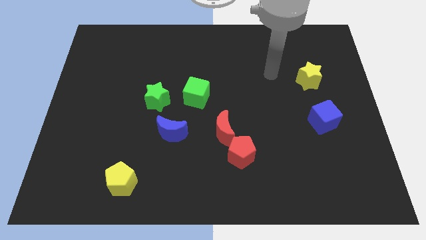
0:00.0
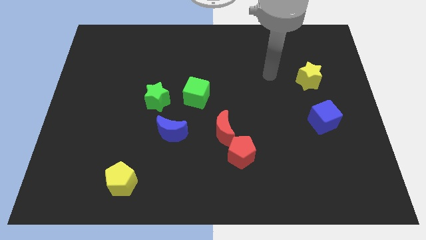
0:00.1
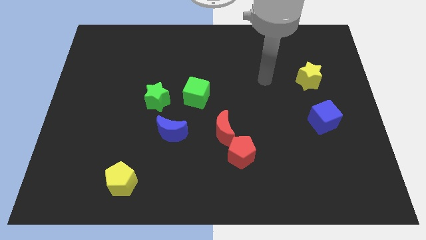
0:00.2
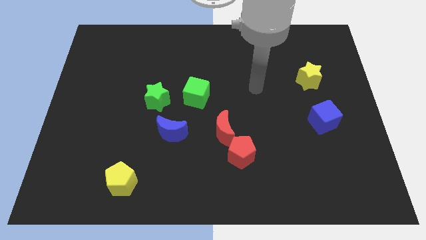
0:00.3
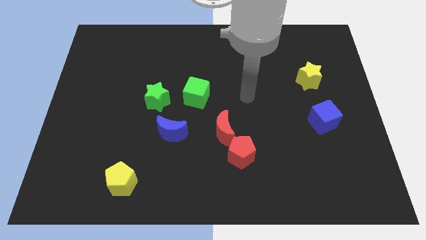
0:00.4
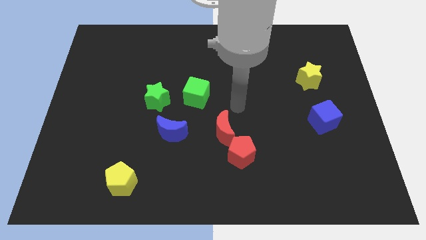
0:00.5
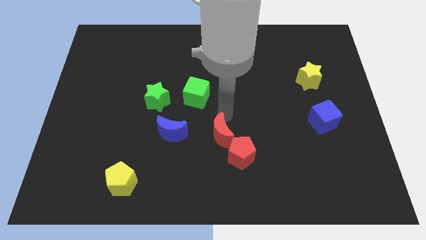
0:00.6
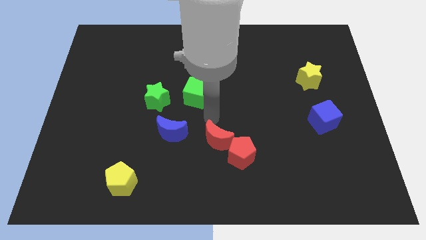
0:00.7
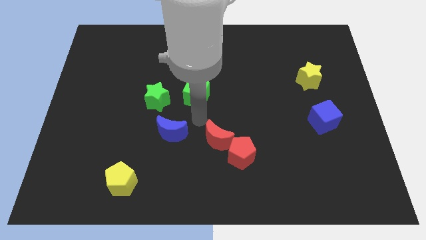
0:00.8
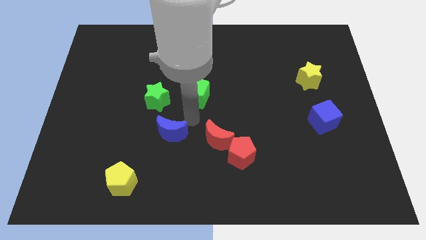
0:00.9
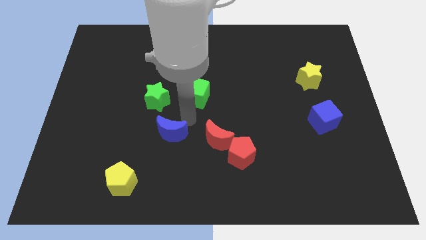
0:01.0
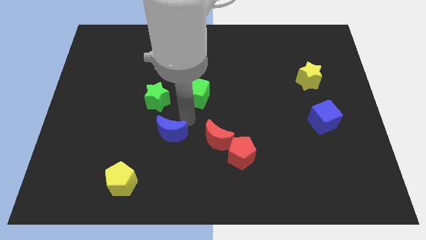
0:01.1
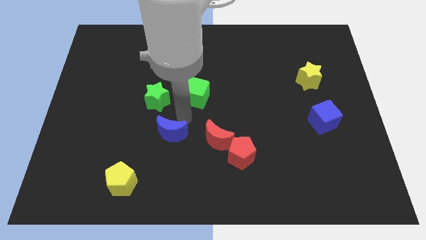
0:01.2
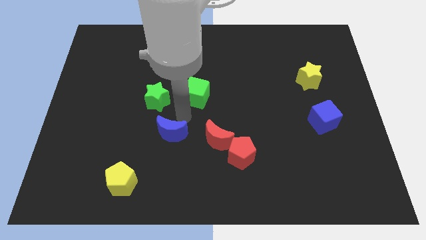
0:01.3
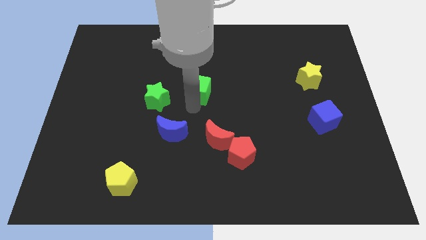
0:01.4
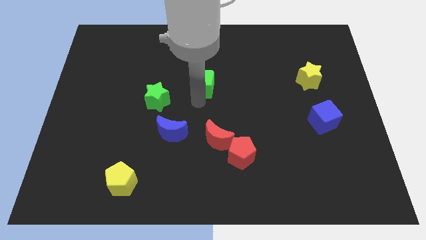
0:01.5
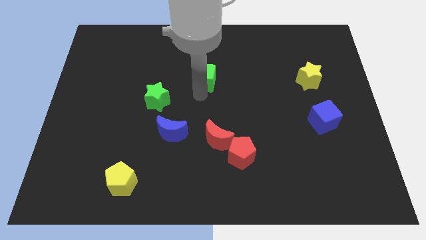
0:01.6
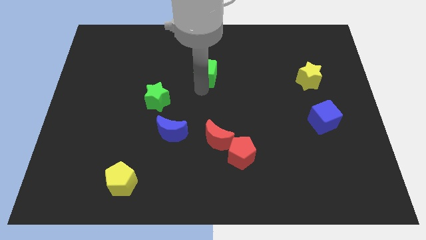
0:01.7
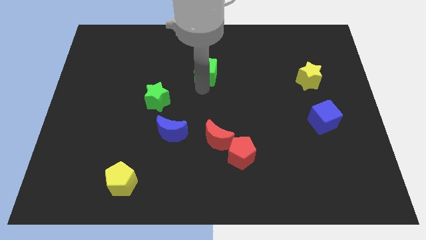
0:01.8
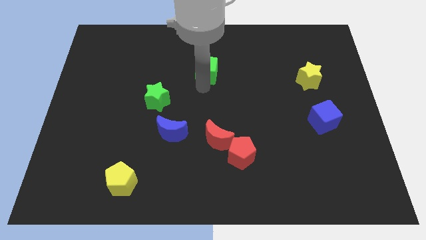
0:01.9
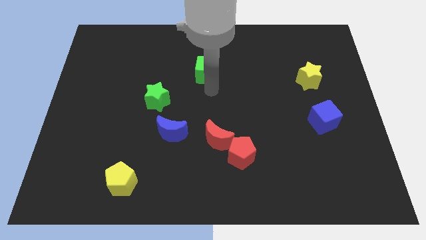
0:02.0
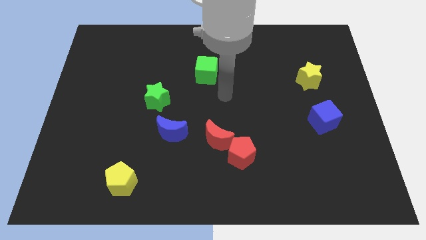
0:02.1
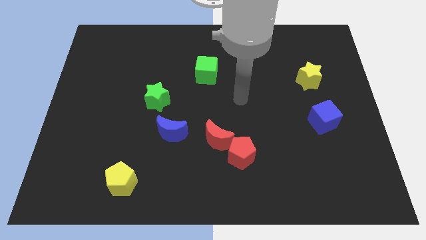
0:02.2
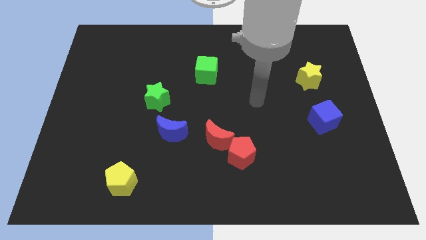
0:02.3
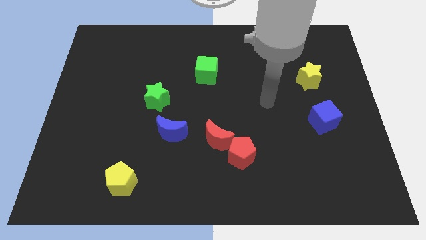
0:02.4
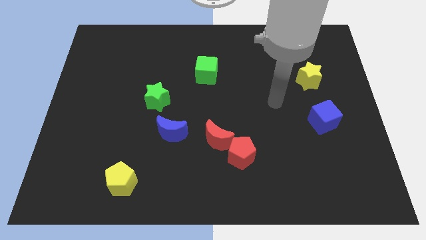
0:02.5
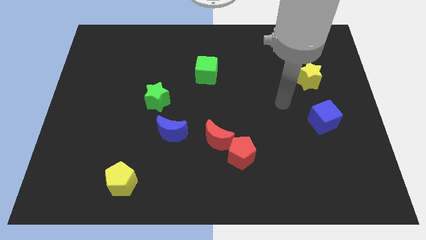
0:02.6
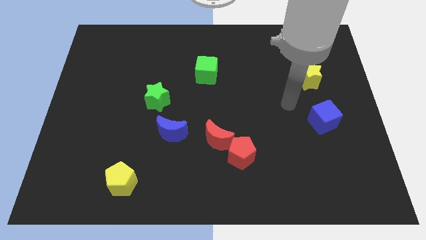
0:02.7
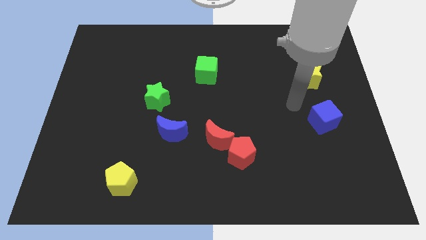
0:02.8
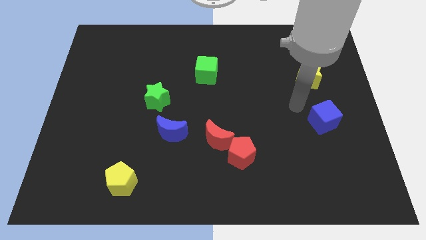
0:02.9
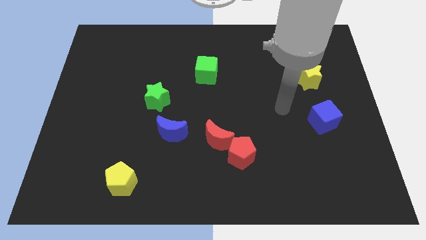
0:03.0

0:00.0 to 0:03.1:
push the red blocks and green cube in opposite directions

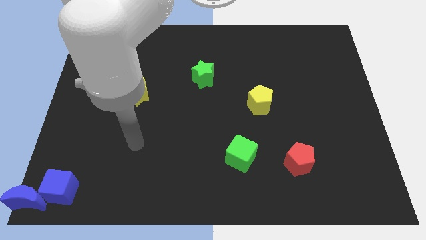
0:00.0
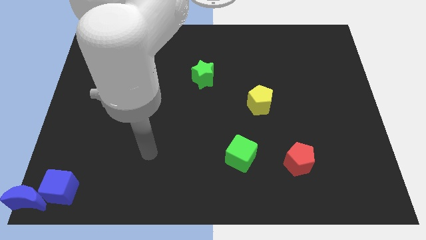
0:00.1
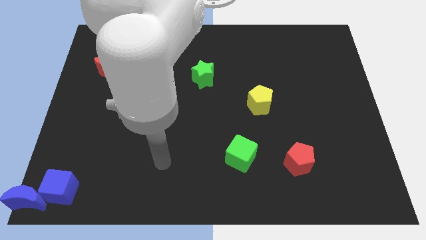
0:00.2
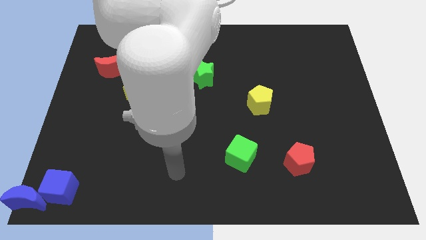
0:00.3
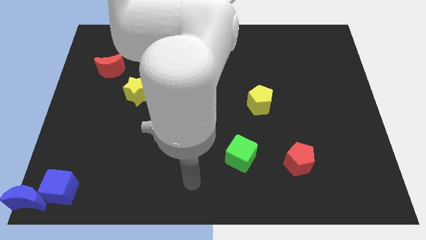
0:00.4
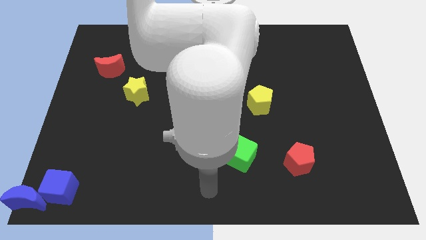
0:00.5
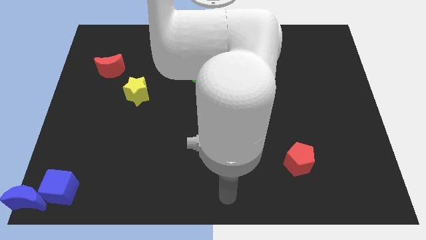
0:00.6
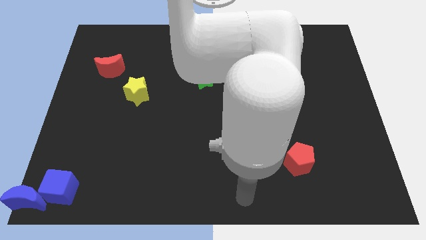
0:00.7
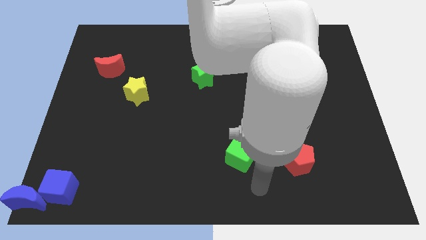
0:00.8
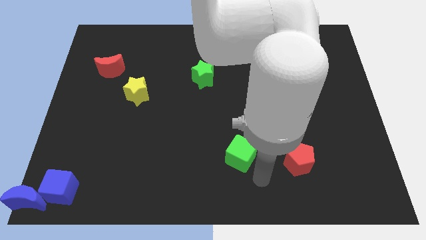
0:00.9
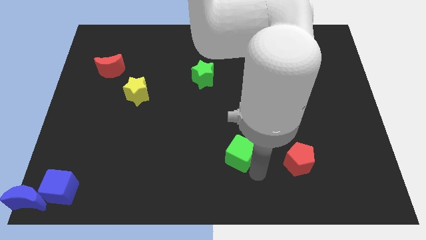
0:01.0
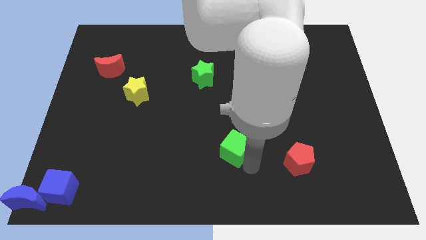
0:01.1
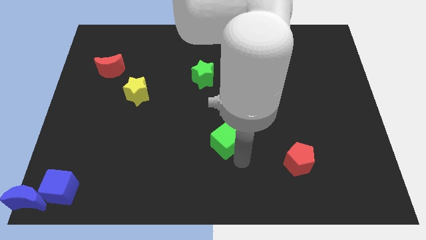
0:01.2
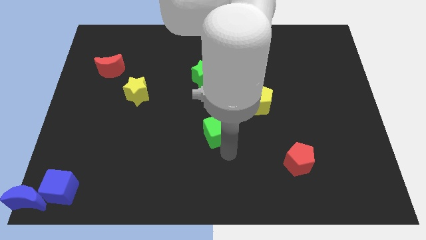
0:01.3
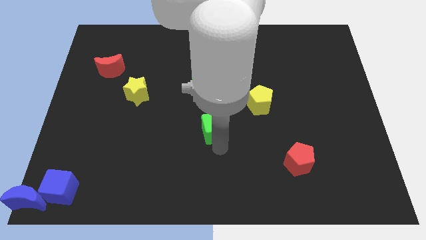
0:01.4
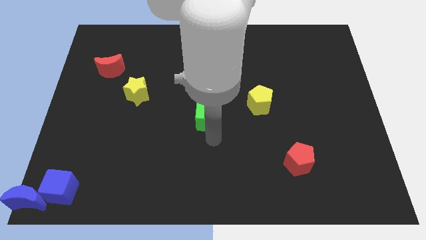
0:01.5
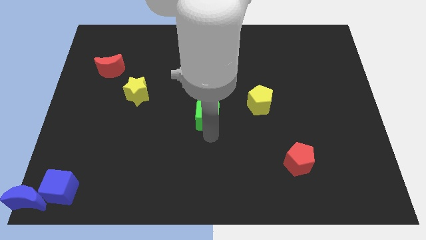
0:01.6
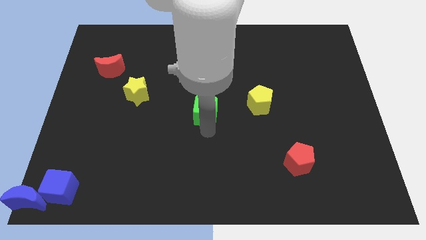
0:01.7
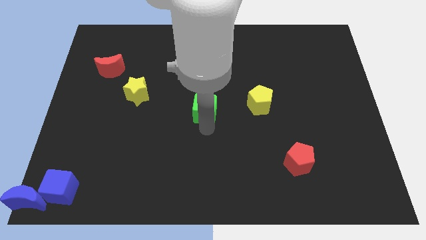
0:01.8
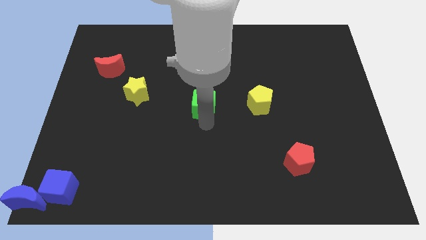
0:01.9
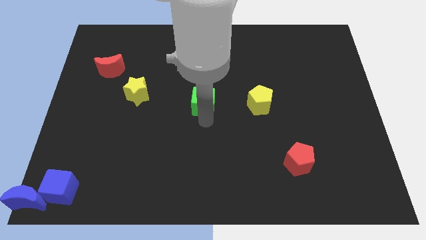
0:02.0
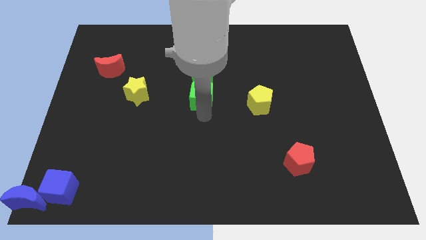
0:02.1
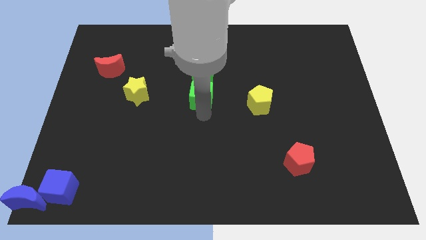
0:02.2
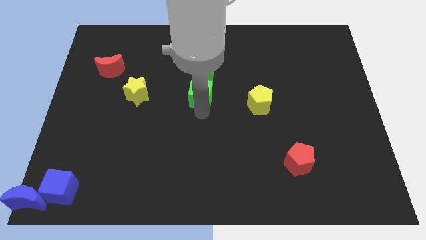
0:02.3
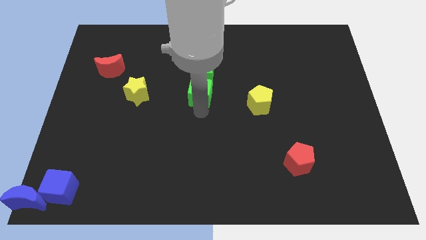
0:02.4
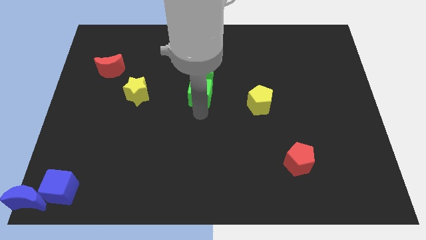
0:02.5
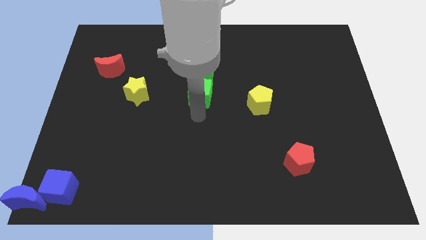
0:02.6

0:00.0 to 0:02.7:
move the green cube to the bottom of the green star

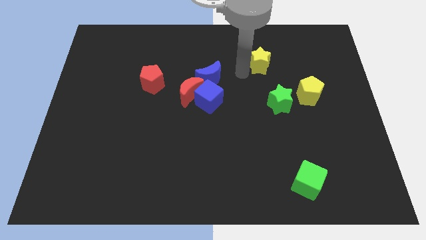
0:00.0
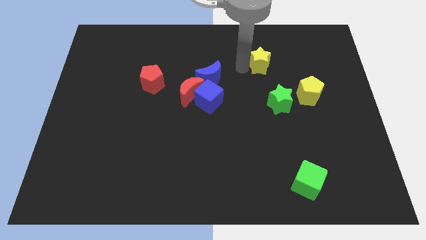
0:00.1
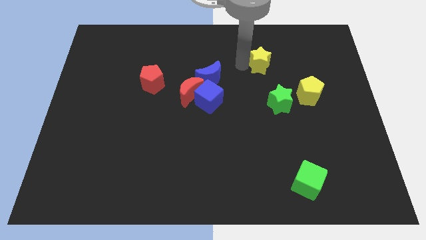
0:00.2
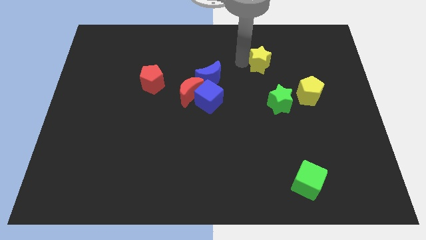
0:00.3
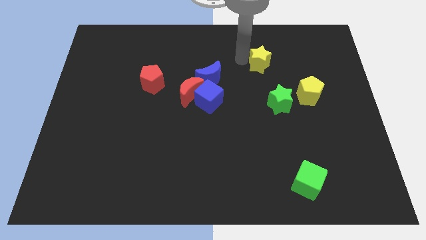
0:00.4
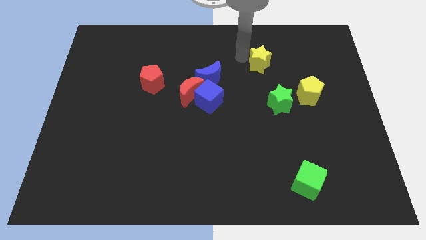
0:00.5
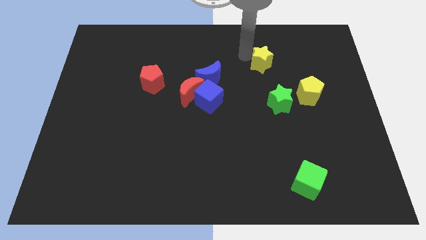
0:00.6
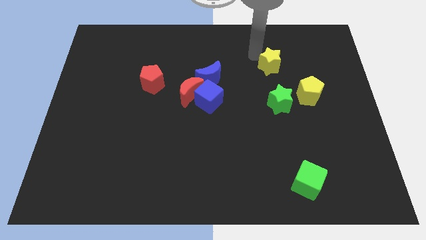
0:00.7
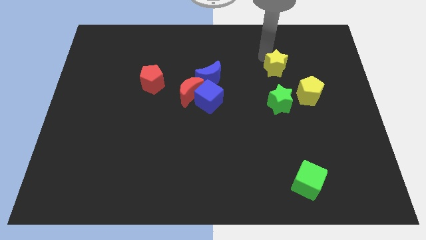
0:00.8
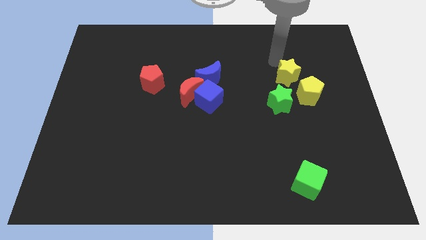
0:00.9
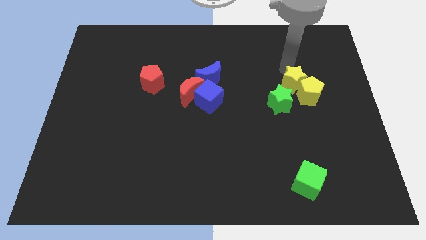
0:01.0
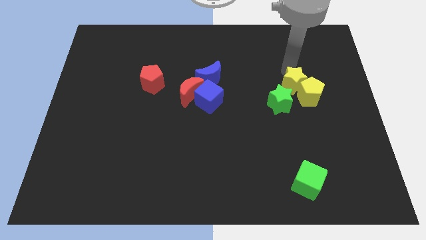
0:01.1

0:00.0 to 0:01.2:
move the yellow star into the yellow pentagon

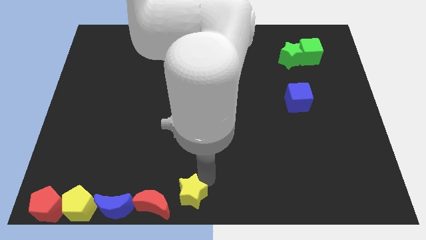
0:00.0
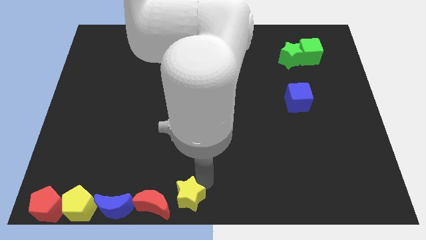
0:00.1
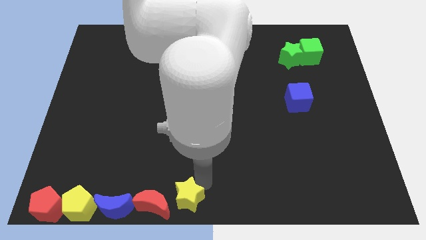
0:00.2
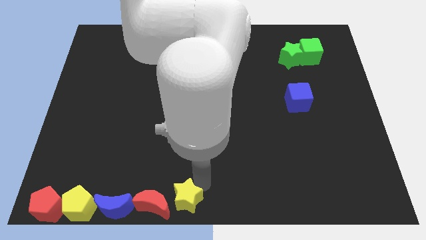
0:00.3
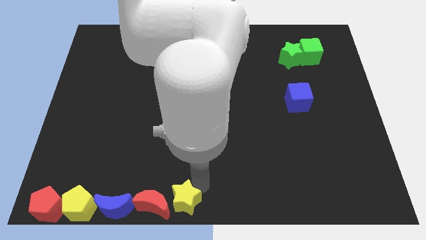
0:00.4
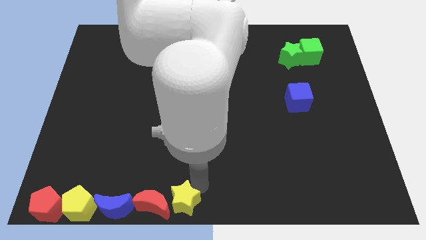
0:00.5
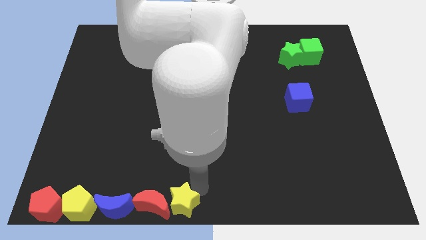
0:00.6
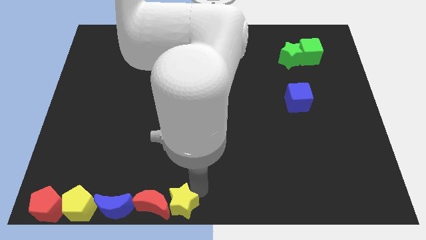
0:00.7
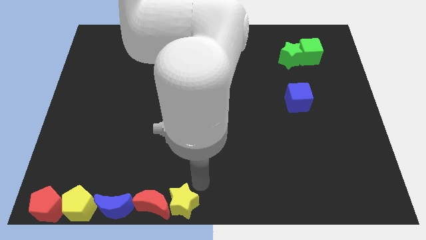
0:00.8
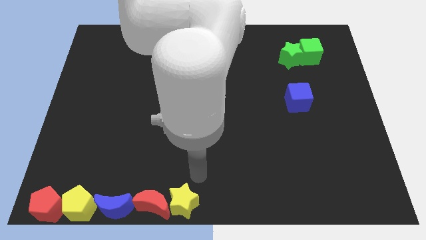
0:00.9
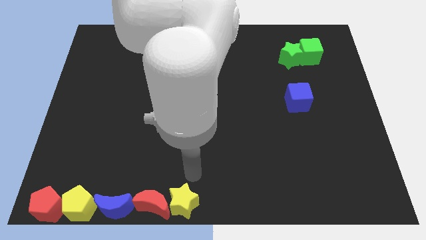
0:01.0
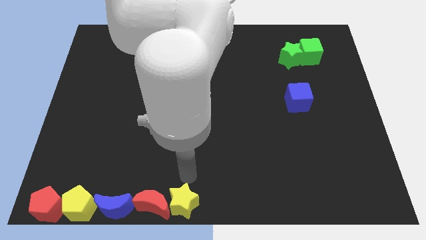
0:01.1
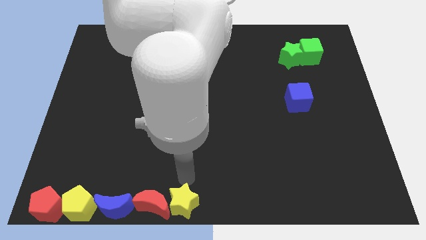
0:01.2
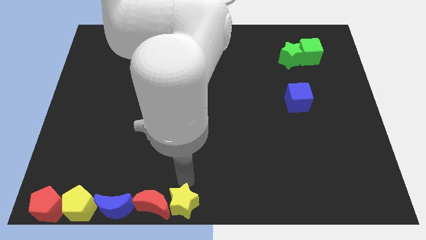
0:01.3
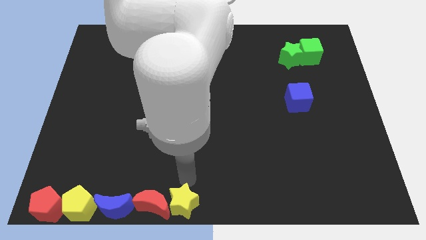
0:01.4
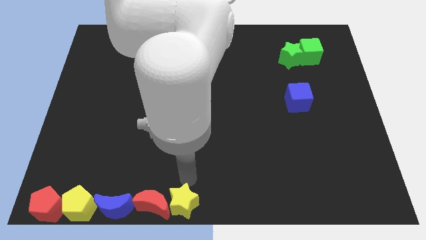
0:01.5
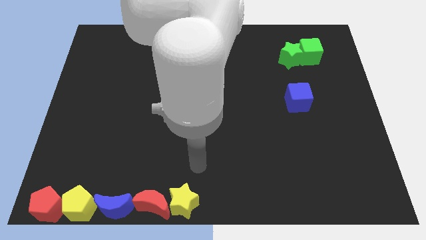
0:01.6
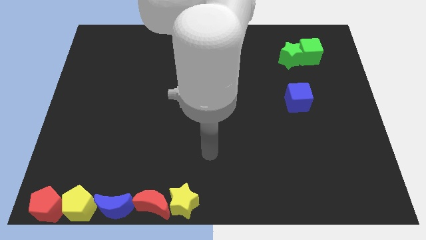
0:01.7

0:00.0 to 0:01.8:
move the yellow star right beside the red crescent

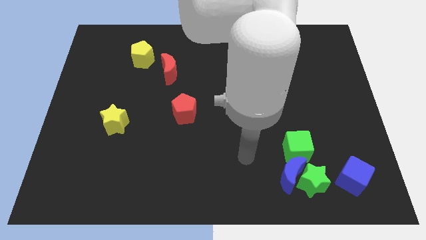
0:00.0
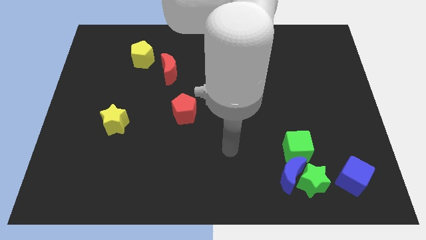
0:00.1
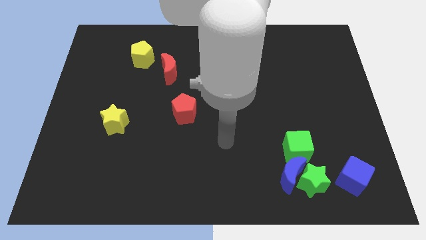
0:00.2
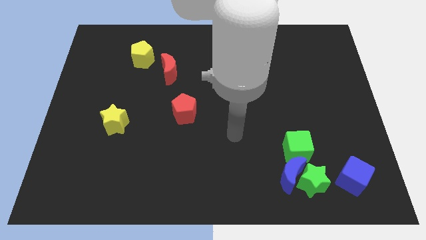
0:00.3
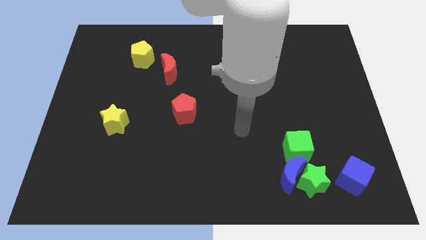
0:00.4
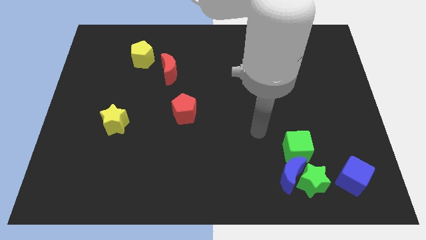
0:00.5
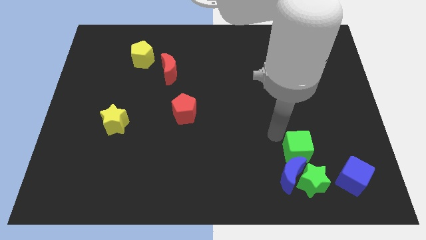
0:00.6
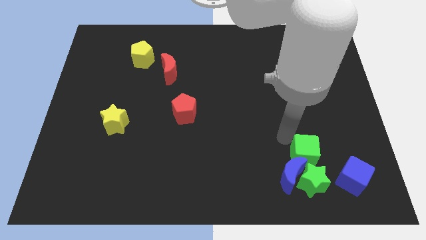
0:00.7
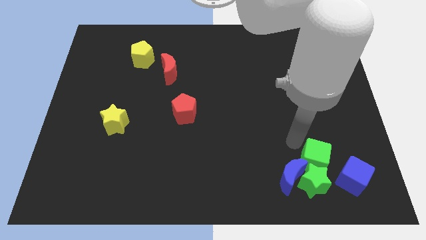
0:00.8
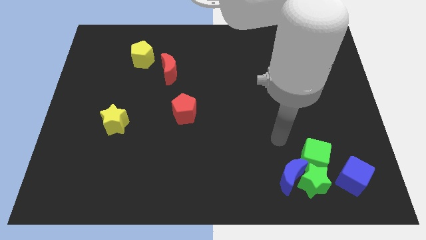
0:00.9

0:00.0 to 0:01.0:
push the green cube into the green star and the blue crescent
